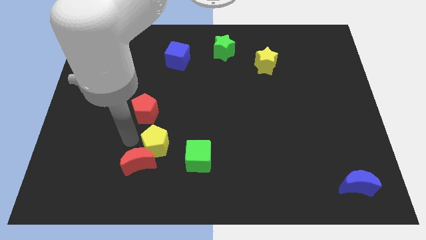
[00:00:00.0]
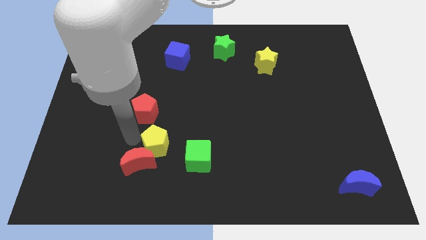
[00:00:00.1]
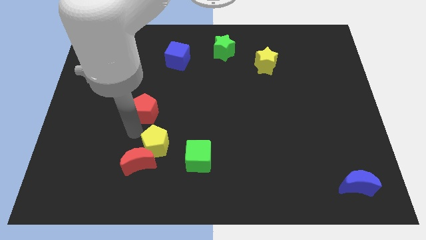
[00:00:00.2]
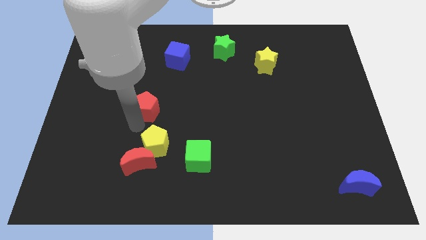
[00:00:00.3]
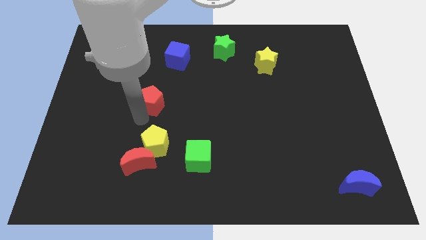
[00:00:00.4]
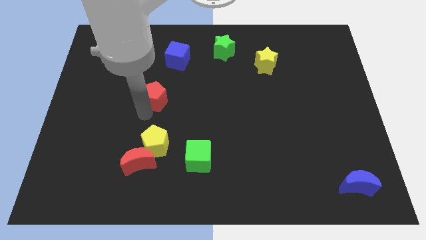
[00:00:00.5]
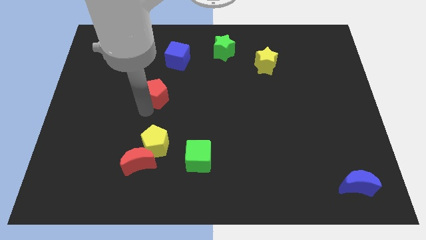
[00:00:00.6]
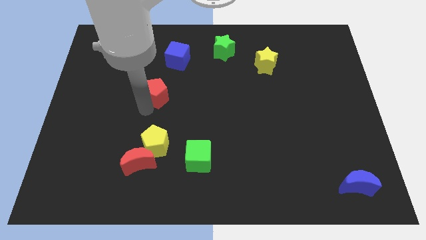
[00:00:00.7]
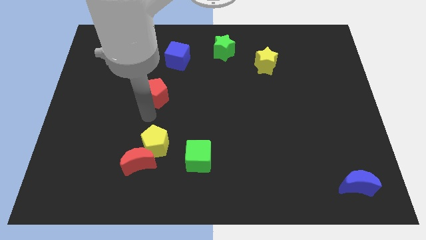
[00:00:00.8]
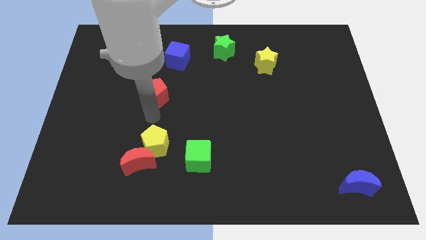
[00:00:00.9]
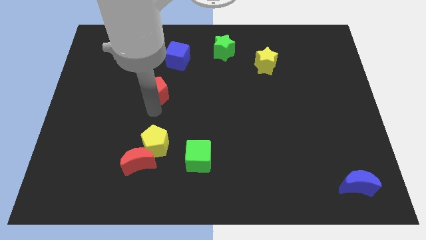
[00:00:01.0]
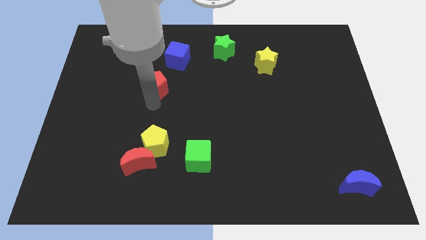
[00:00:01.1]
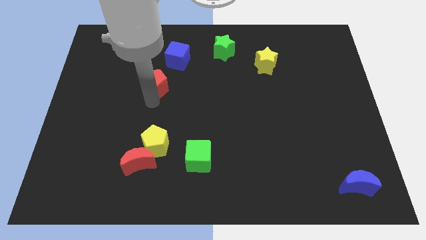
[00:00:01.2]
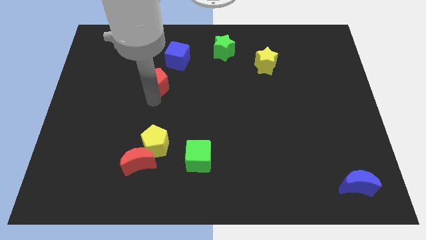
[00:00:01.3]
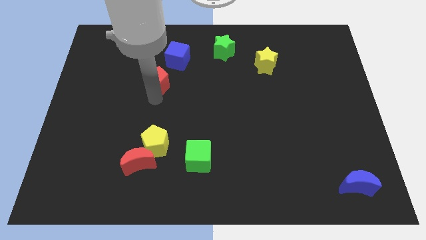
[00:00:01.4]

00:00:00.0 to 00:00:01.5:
push the red pentagon slightly towards the blue cube

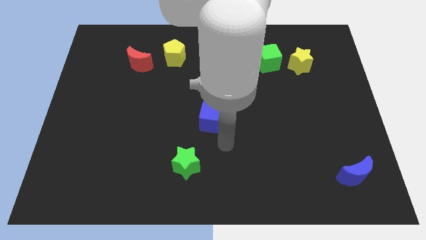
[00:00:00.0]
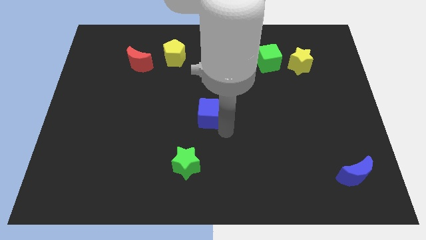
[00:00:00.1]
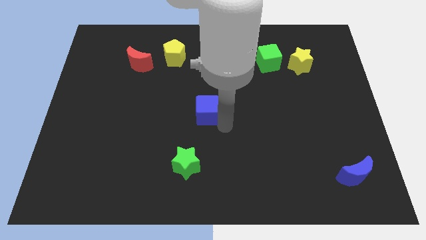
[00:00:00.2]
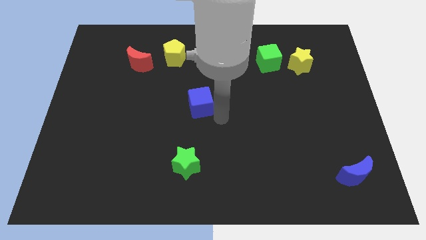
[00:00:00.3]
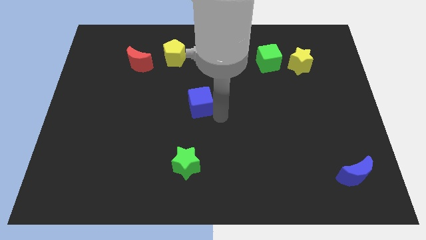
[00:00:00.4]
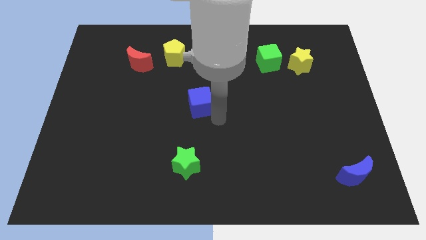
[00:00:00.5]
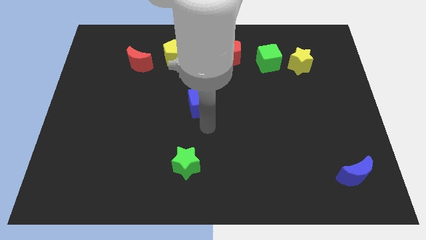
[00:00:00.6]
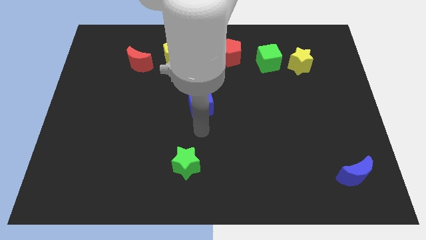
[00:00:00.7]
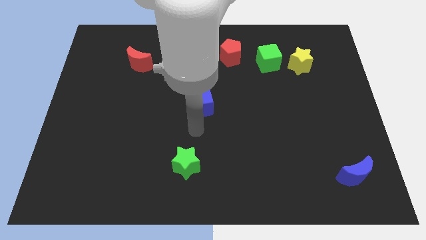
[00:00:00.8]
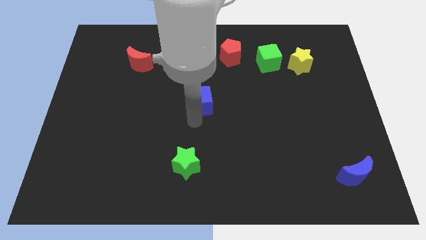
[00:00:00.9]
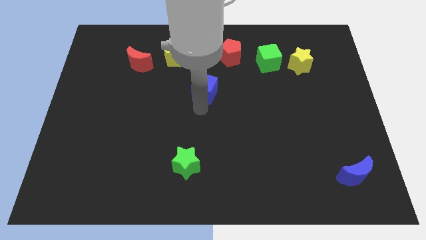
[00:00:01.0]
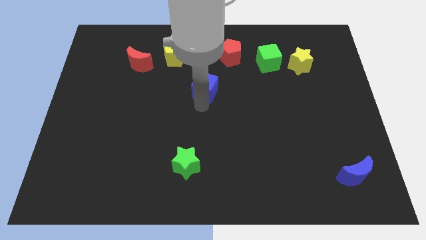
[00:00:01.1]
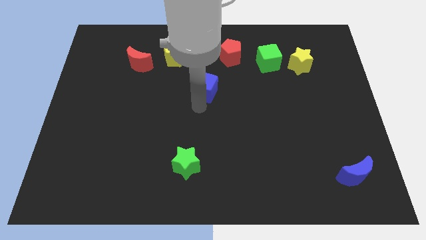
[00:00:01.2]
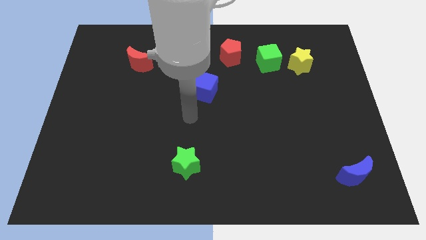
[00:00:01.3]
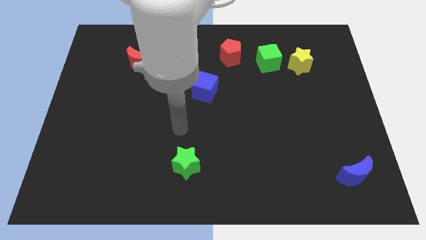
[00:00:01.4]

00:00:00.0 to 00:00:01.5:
make a triangle by placing blue cube with two pentagons

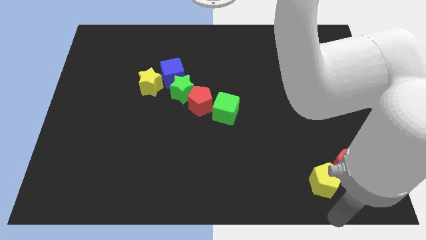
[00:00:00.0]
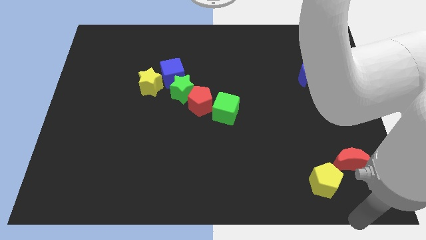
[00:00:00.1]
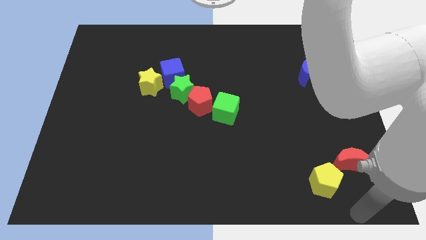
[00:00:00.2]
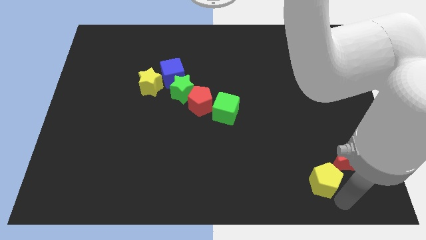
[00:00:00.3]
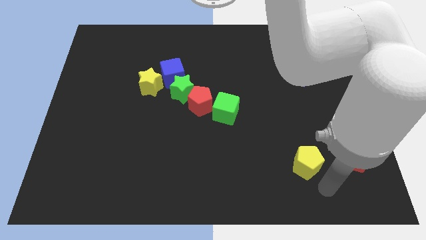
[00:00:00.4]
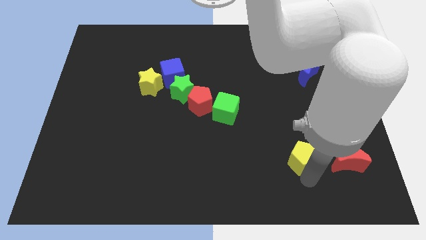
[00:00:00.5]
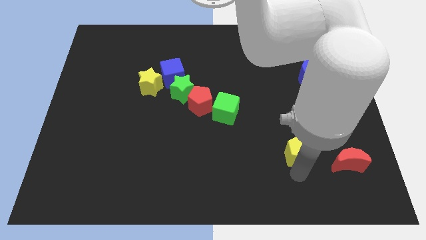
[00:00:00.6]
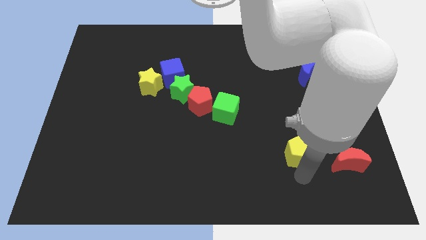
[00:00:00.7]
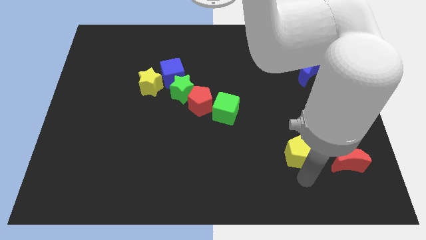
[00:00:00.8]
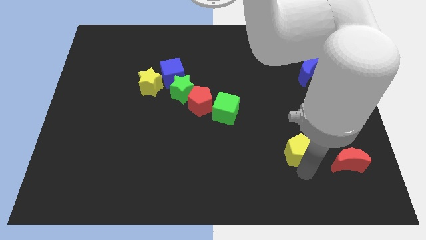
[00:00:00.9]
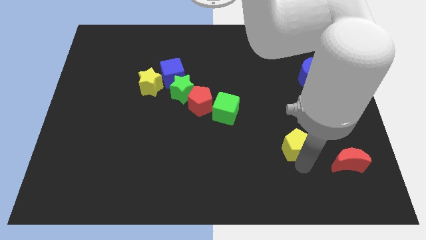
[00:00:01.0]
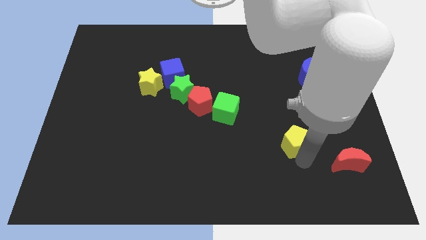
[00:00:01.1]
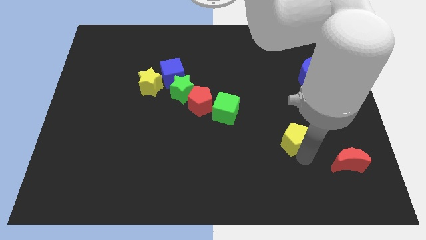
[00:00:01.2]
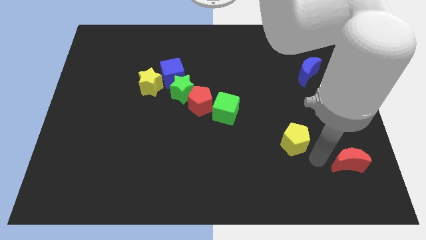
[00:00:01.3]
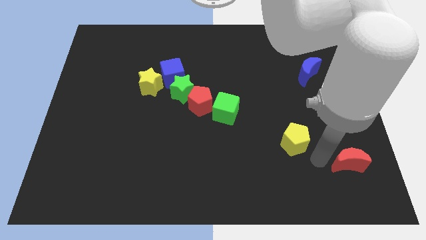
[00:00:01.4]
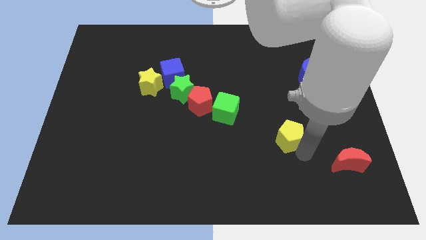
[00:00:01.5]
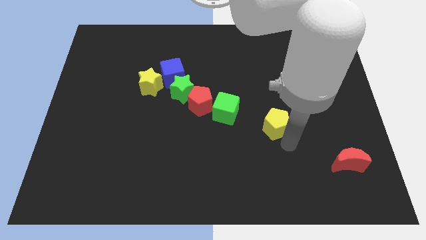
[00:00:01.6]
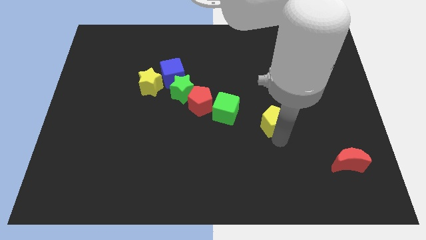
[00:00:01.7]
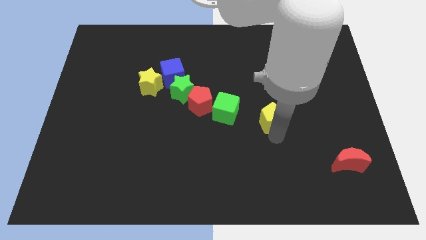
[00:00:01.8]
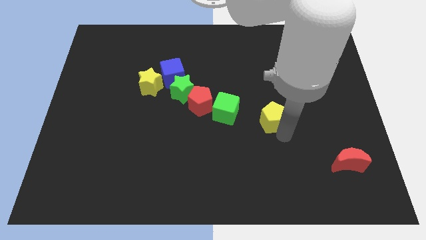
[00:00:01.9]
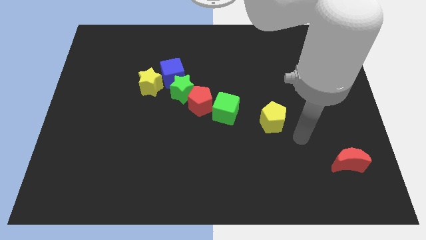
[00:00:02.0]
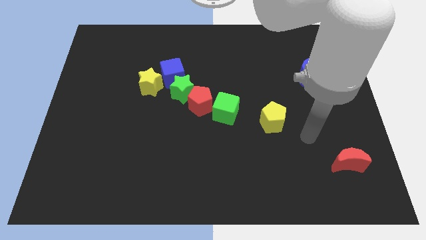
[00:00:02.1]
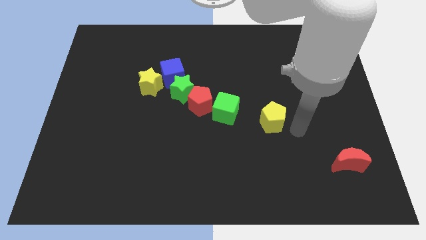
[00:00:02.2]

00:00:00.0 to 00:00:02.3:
move the yellow pentagon to the right of the green cube

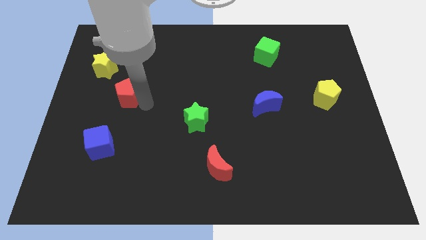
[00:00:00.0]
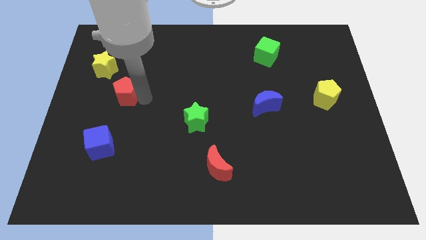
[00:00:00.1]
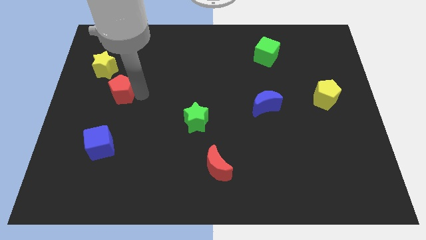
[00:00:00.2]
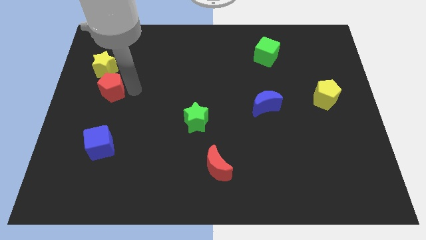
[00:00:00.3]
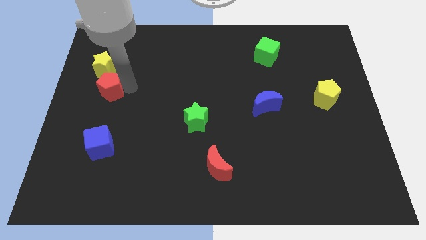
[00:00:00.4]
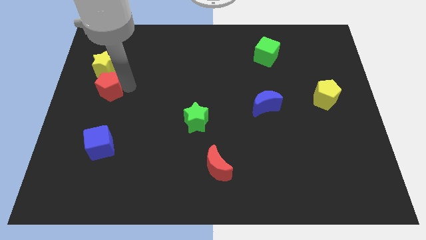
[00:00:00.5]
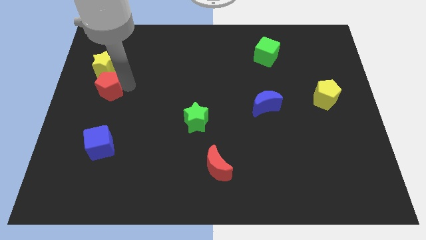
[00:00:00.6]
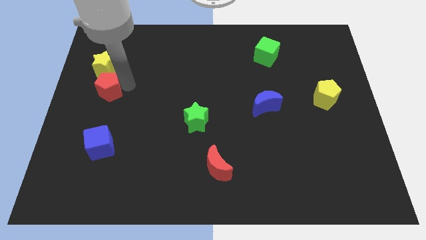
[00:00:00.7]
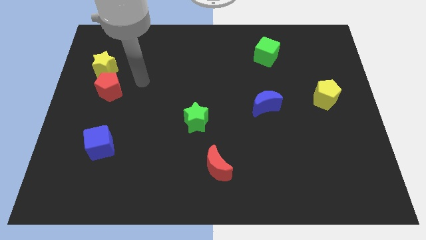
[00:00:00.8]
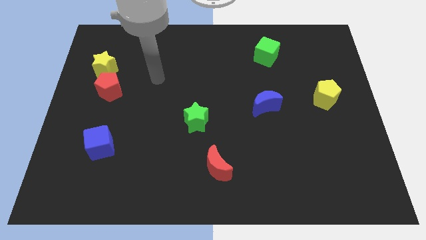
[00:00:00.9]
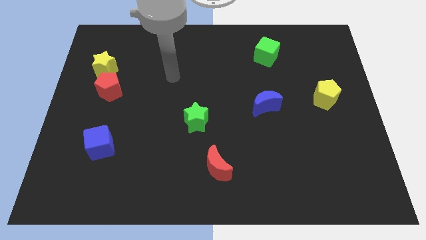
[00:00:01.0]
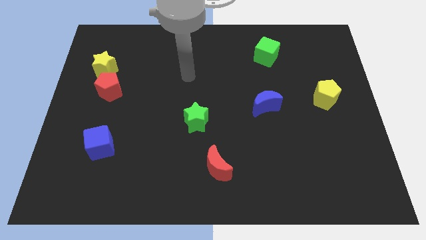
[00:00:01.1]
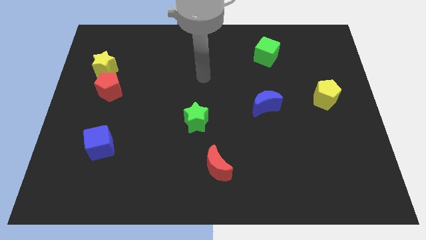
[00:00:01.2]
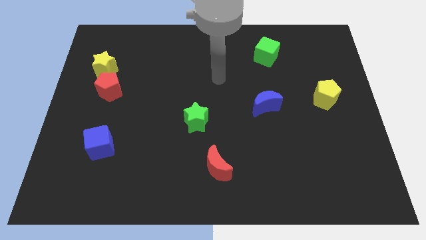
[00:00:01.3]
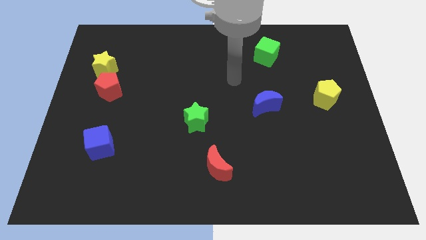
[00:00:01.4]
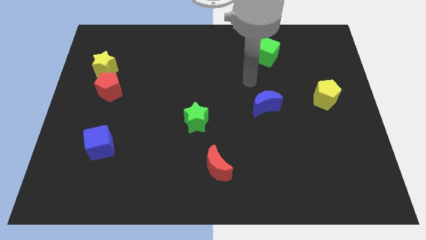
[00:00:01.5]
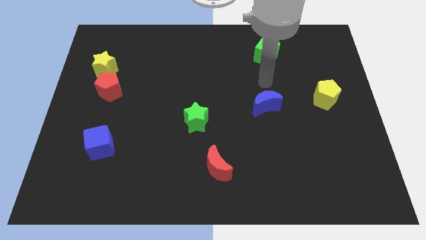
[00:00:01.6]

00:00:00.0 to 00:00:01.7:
place red pentagon below the yellow star

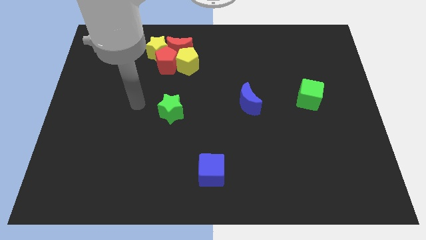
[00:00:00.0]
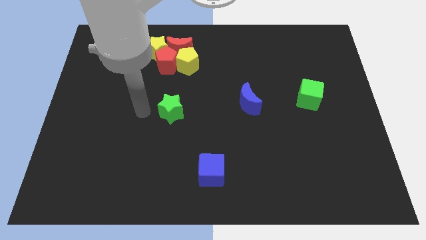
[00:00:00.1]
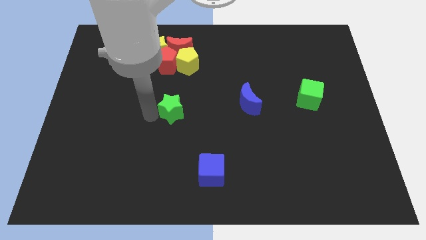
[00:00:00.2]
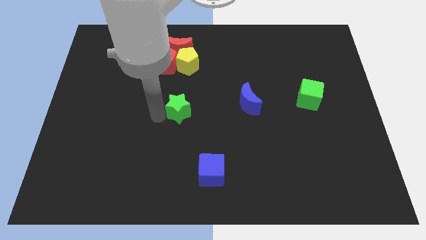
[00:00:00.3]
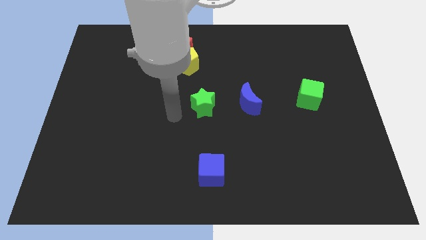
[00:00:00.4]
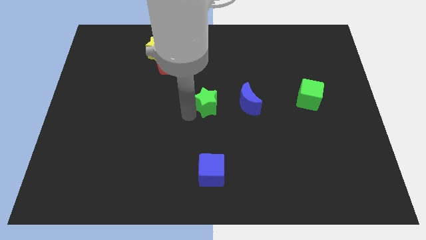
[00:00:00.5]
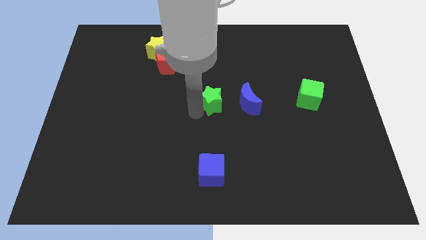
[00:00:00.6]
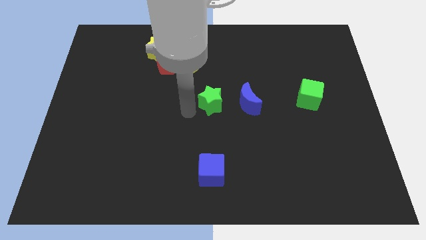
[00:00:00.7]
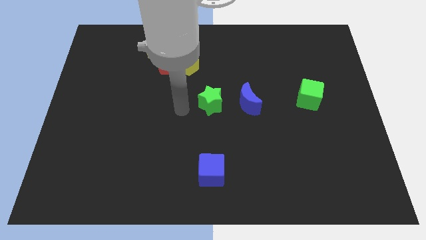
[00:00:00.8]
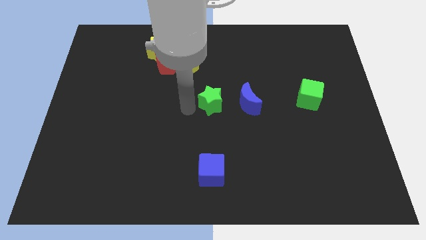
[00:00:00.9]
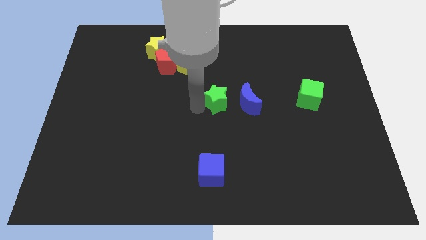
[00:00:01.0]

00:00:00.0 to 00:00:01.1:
move green to the center of the board

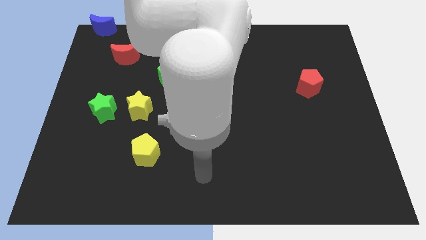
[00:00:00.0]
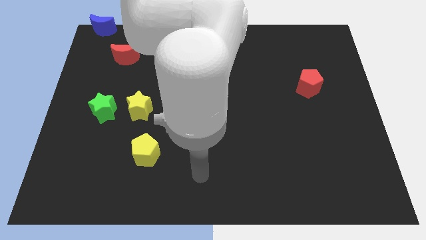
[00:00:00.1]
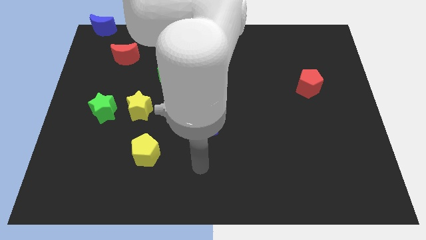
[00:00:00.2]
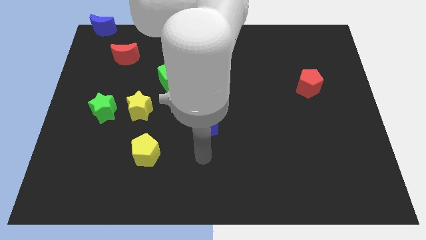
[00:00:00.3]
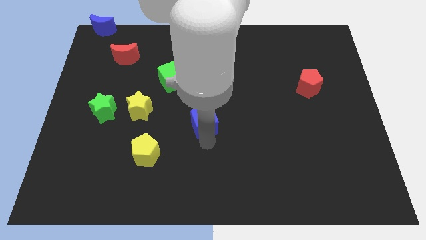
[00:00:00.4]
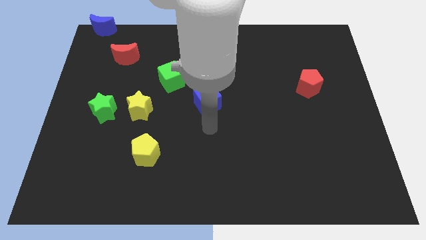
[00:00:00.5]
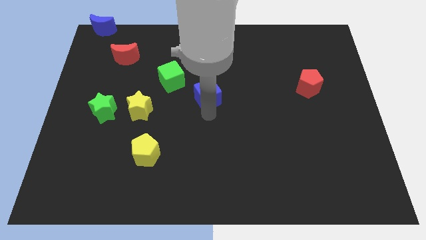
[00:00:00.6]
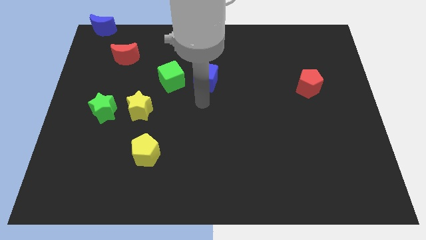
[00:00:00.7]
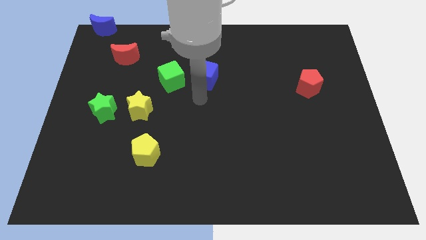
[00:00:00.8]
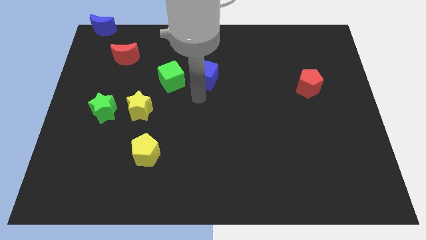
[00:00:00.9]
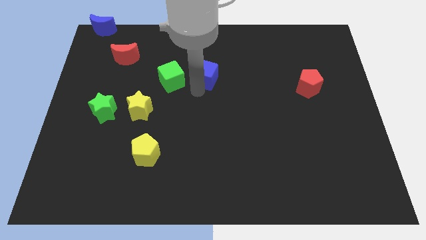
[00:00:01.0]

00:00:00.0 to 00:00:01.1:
move the blue cube to the right of the green cube
